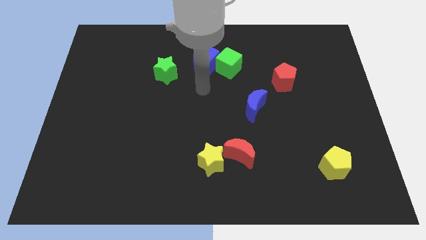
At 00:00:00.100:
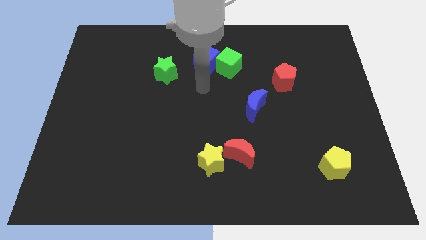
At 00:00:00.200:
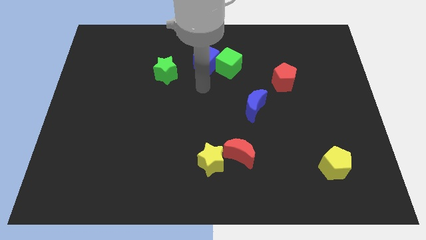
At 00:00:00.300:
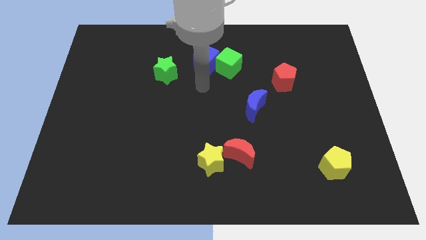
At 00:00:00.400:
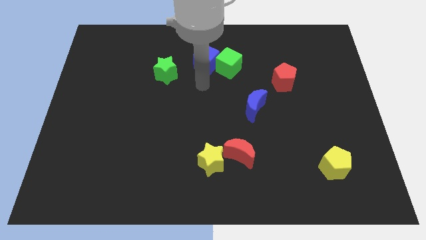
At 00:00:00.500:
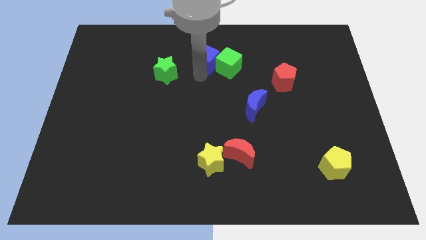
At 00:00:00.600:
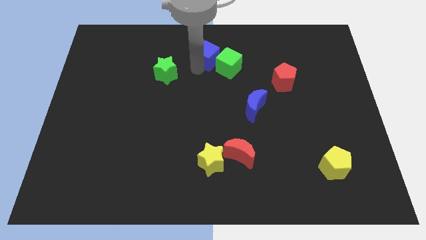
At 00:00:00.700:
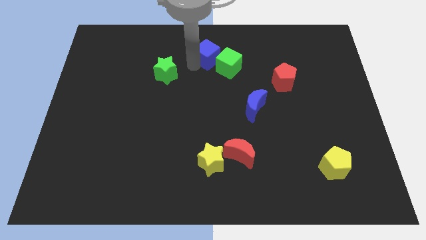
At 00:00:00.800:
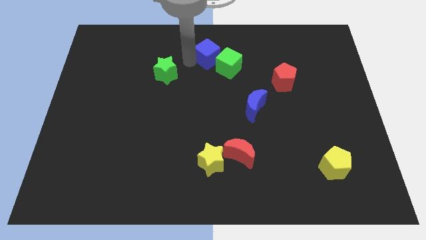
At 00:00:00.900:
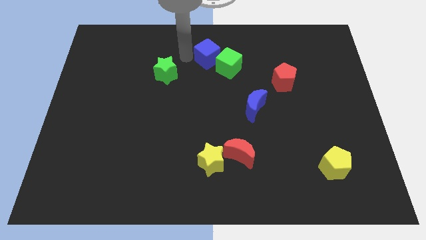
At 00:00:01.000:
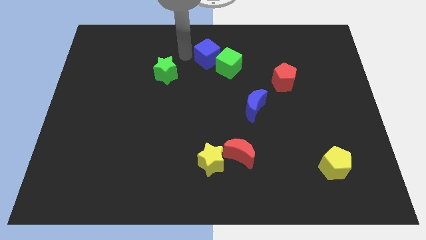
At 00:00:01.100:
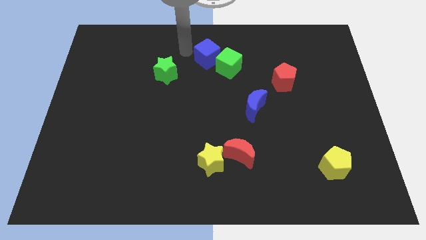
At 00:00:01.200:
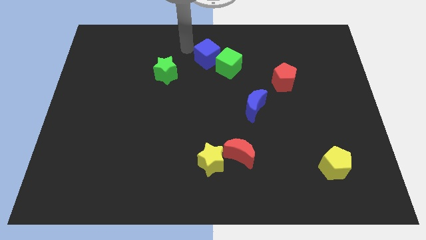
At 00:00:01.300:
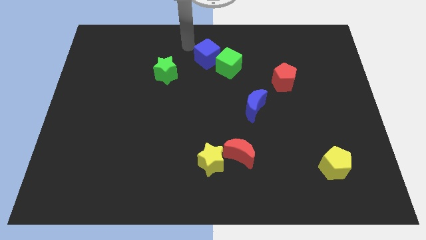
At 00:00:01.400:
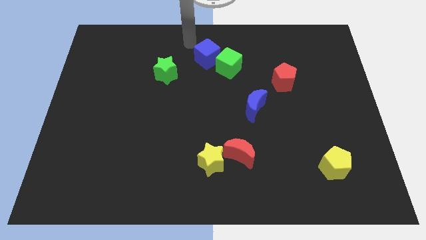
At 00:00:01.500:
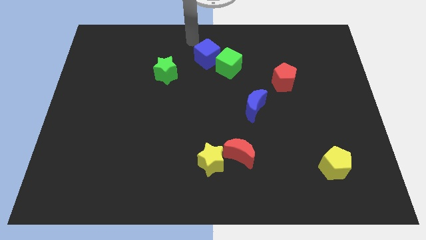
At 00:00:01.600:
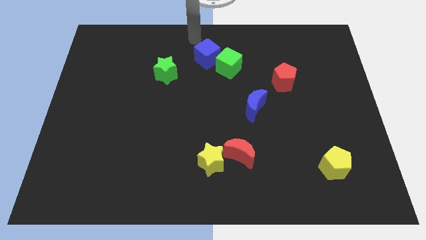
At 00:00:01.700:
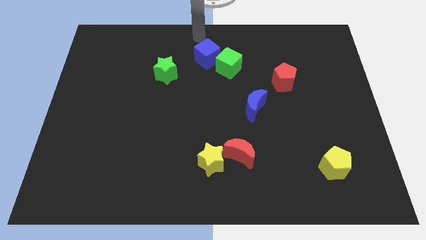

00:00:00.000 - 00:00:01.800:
place your arm above blue cube

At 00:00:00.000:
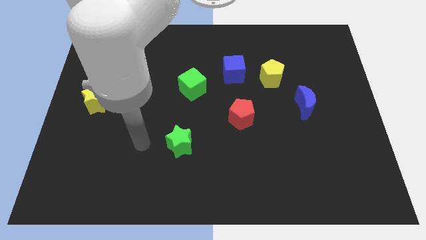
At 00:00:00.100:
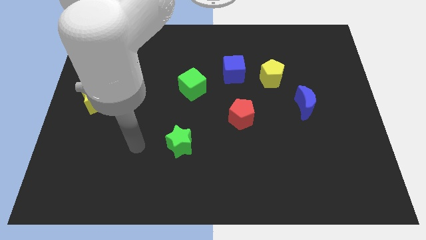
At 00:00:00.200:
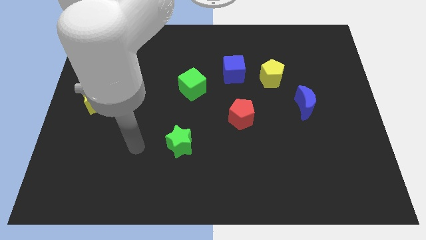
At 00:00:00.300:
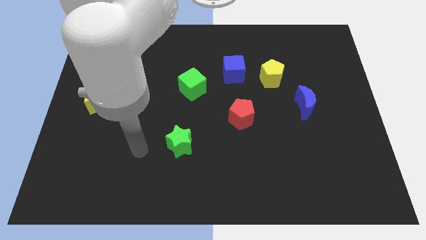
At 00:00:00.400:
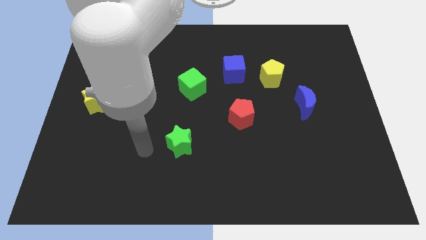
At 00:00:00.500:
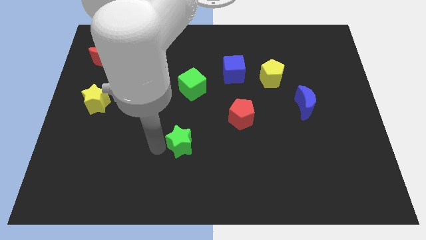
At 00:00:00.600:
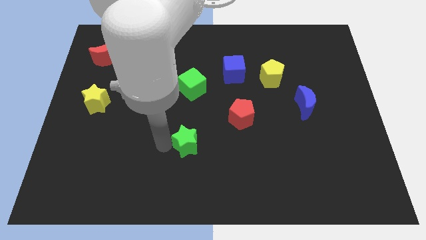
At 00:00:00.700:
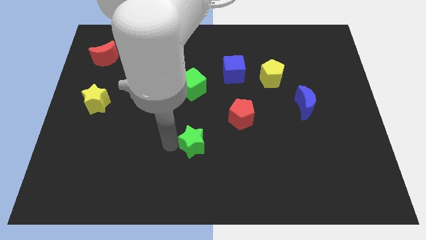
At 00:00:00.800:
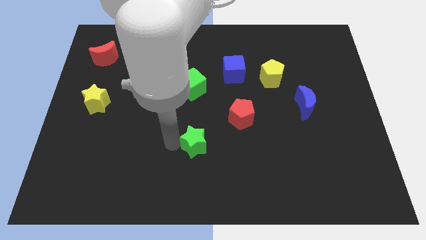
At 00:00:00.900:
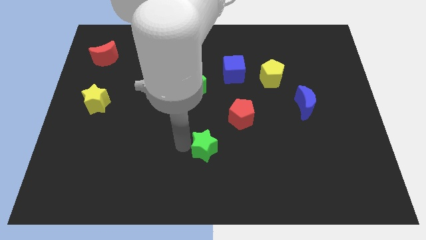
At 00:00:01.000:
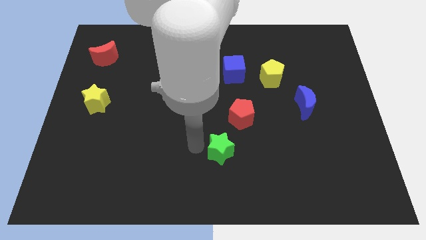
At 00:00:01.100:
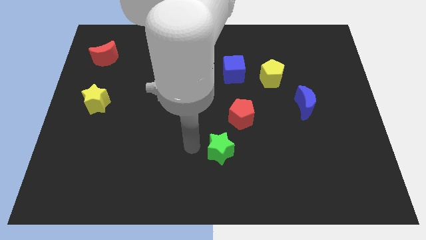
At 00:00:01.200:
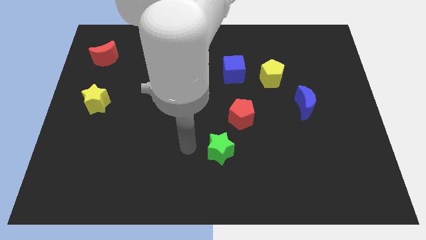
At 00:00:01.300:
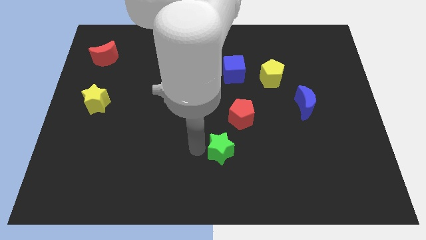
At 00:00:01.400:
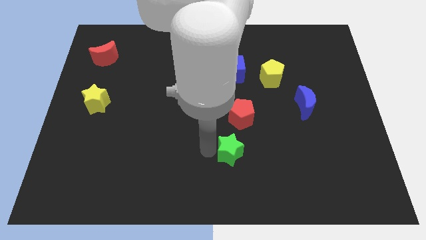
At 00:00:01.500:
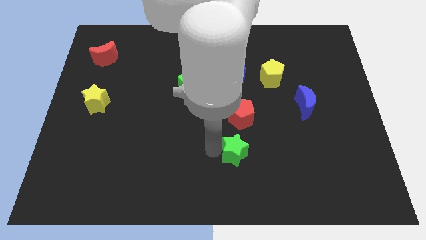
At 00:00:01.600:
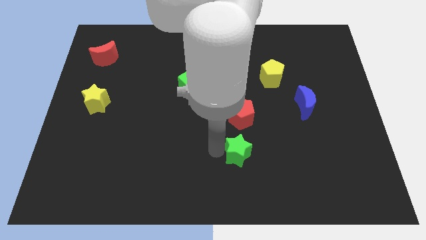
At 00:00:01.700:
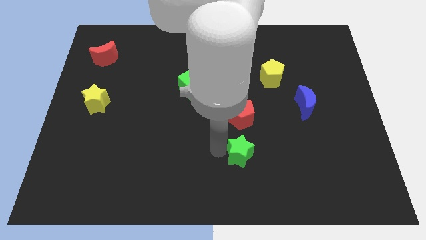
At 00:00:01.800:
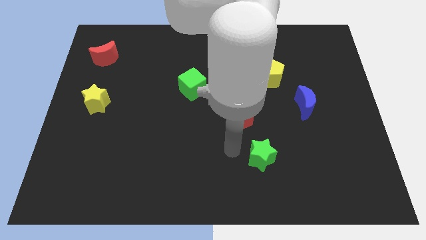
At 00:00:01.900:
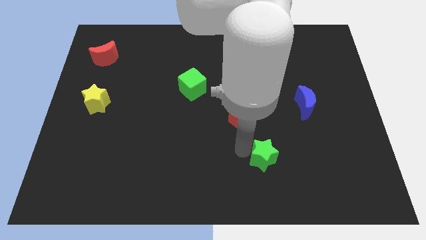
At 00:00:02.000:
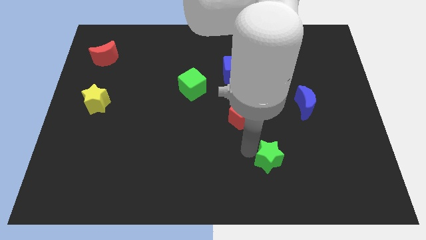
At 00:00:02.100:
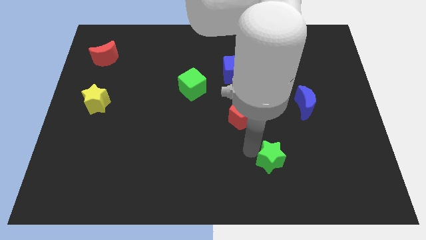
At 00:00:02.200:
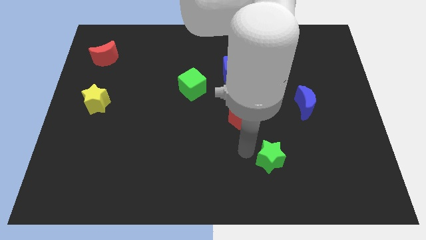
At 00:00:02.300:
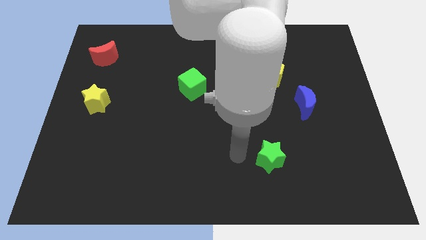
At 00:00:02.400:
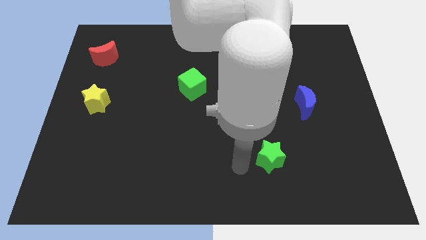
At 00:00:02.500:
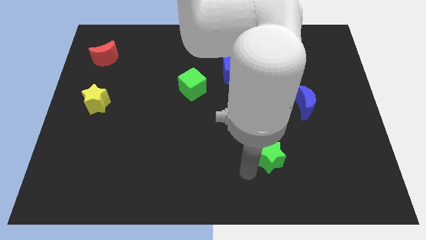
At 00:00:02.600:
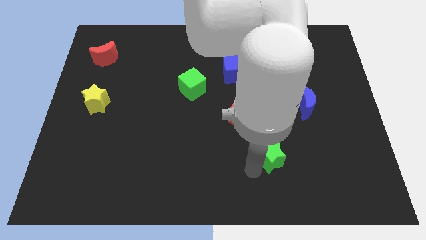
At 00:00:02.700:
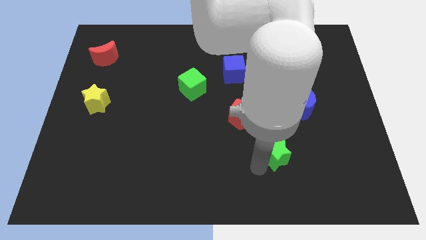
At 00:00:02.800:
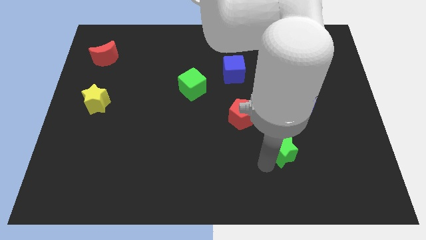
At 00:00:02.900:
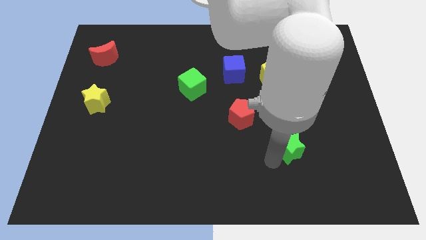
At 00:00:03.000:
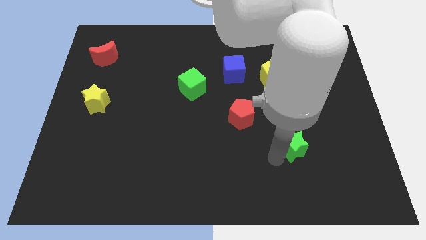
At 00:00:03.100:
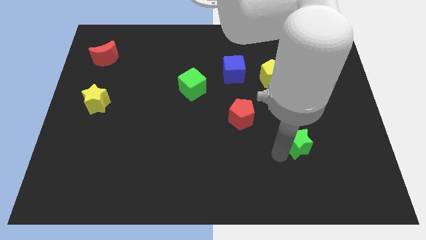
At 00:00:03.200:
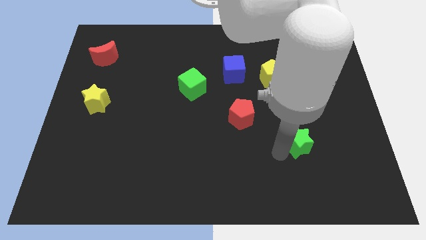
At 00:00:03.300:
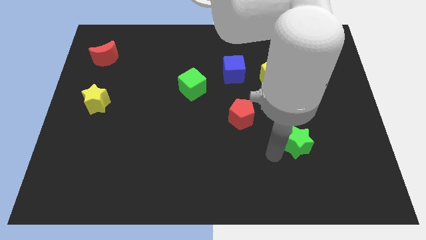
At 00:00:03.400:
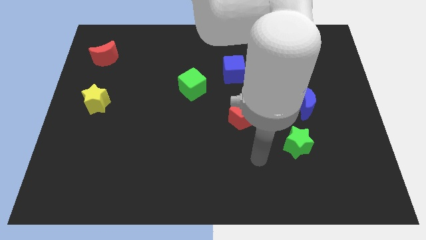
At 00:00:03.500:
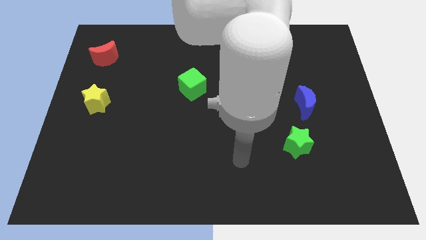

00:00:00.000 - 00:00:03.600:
place the green star right to the red pentagon

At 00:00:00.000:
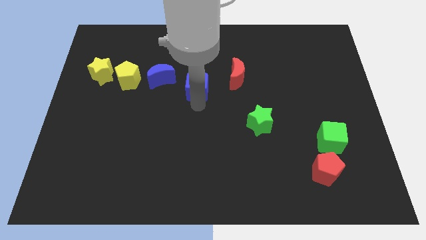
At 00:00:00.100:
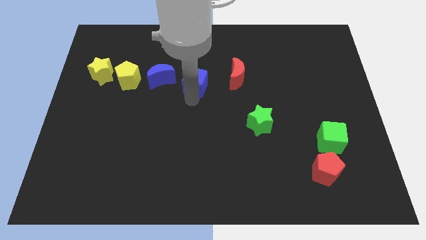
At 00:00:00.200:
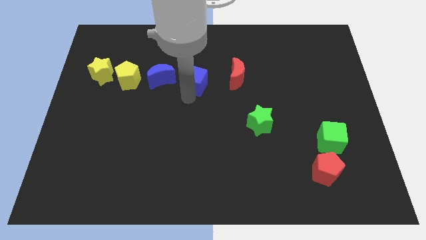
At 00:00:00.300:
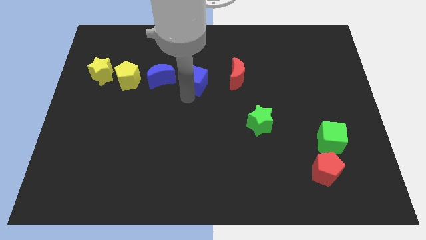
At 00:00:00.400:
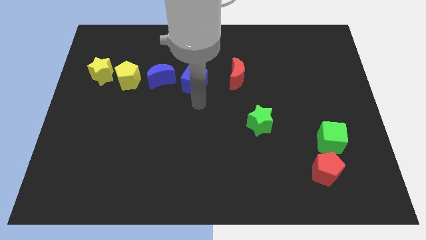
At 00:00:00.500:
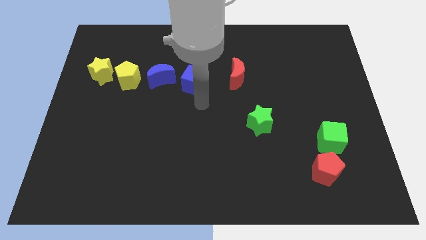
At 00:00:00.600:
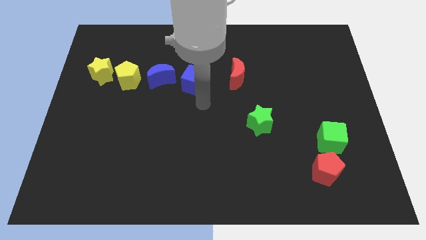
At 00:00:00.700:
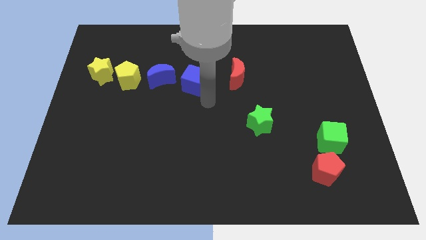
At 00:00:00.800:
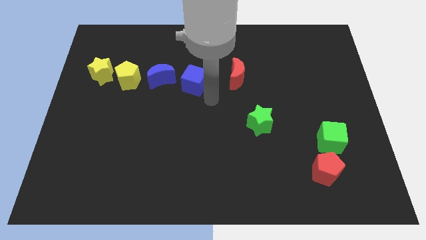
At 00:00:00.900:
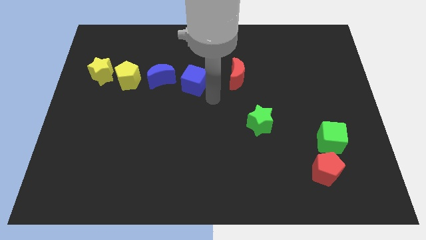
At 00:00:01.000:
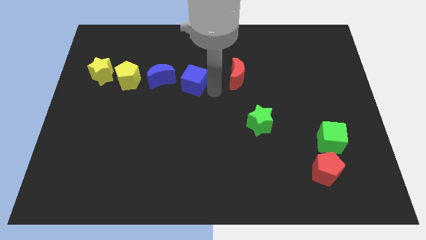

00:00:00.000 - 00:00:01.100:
place the blue cube between red moon and blue moon

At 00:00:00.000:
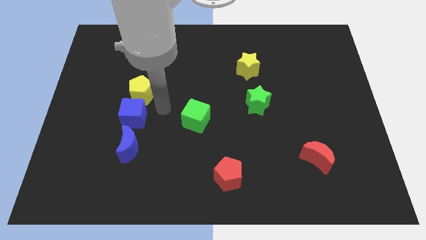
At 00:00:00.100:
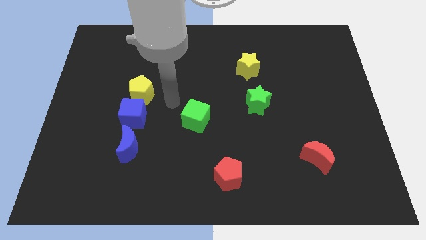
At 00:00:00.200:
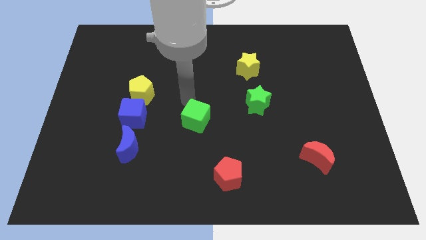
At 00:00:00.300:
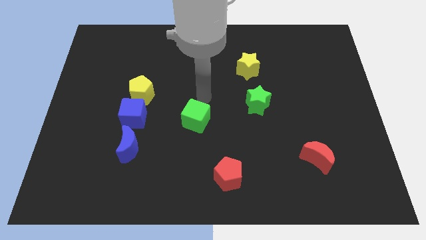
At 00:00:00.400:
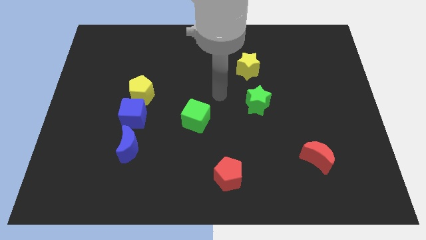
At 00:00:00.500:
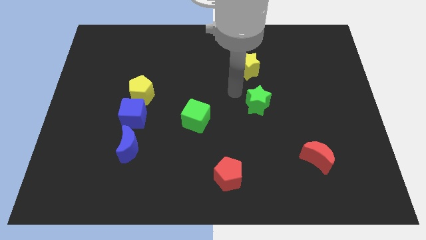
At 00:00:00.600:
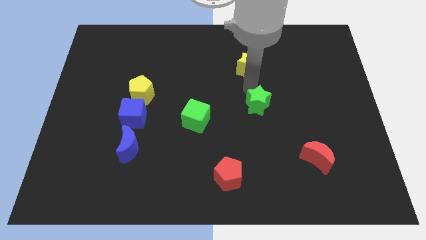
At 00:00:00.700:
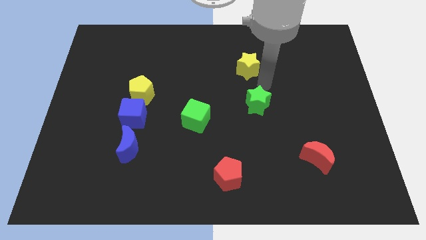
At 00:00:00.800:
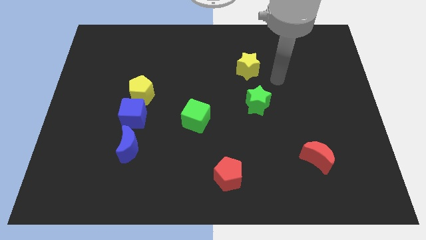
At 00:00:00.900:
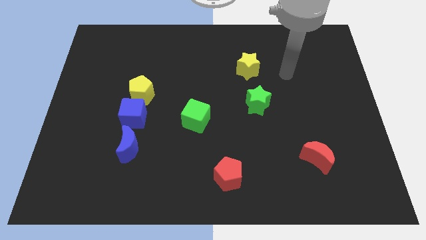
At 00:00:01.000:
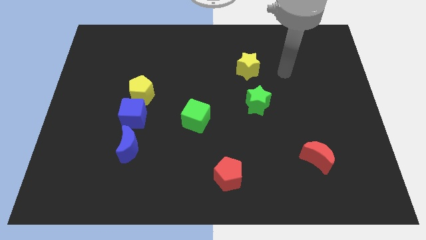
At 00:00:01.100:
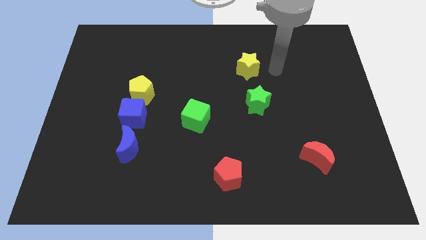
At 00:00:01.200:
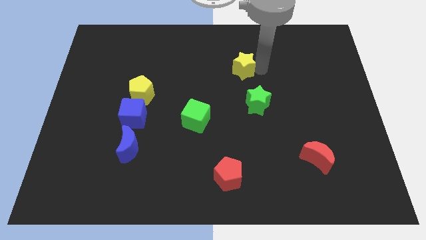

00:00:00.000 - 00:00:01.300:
place your arm at the right of the yellow star

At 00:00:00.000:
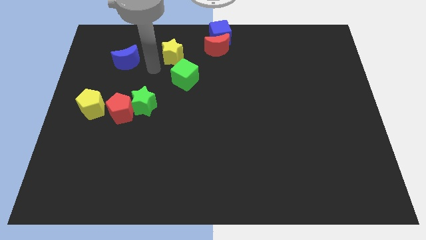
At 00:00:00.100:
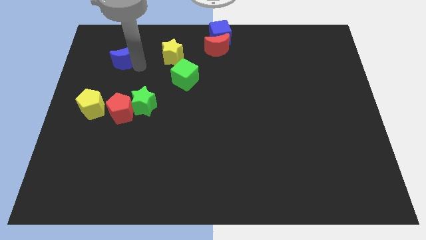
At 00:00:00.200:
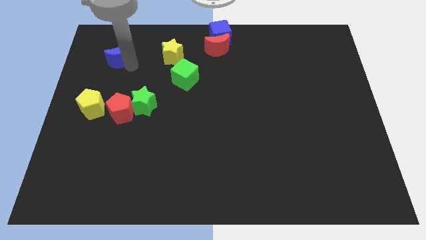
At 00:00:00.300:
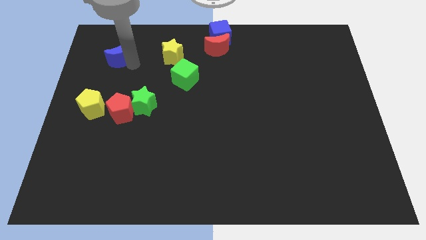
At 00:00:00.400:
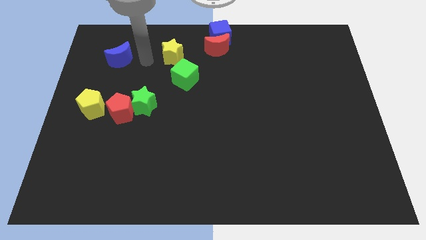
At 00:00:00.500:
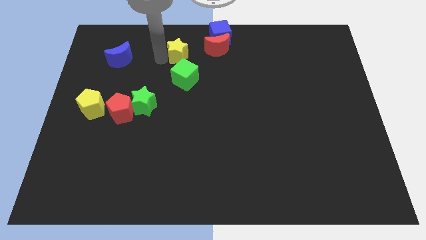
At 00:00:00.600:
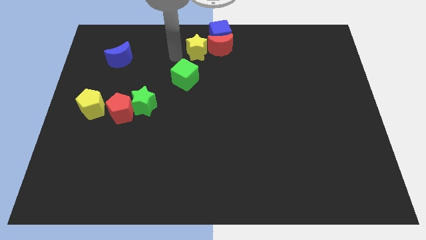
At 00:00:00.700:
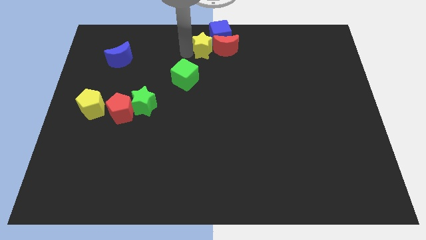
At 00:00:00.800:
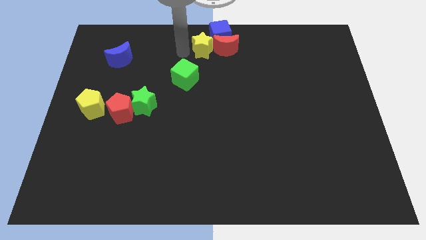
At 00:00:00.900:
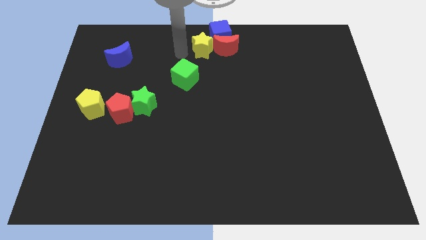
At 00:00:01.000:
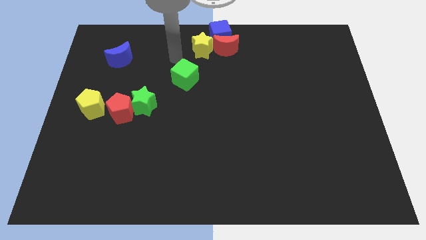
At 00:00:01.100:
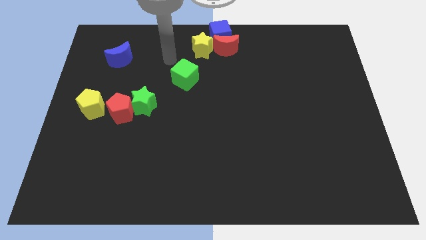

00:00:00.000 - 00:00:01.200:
slide yellow star in to red moon
